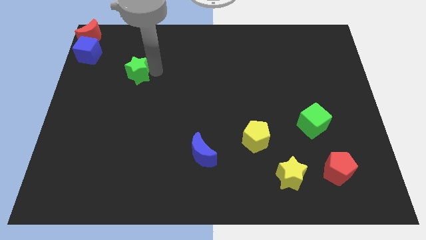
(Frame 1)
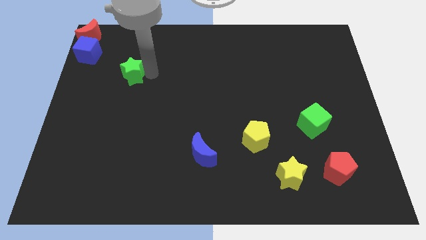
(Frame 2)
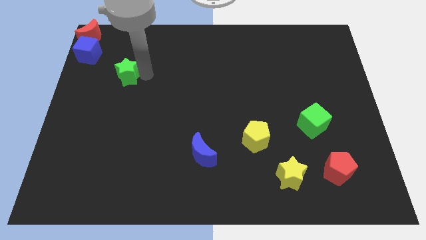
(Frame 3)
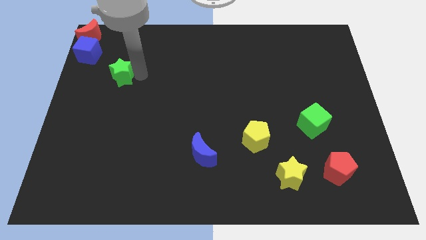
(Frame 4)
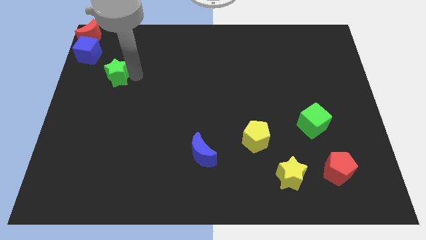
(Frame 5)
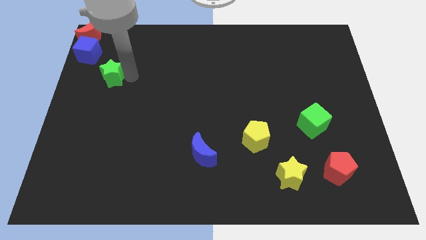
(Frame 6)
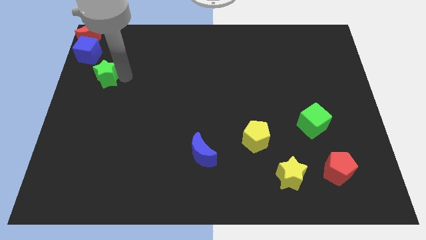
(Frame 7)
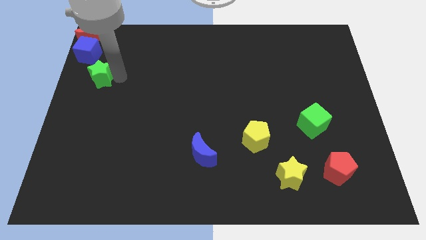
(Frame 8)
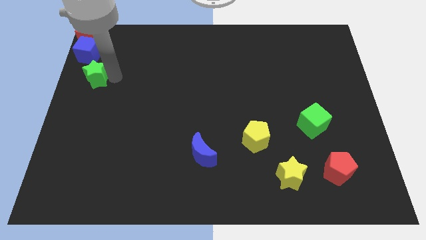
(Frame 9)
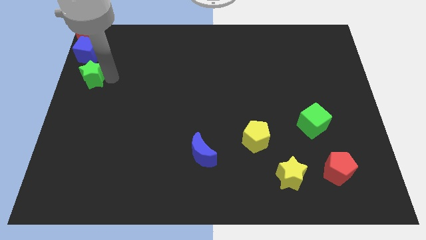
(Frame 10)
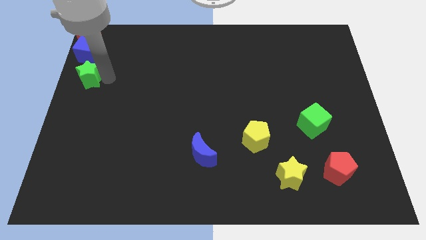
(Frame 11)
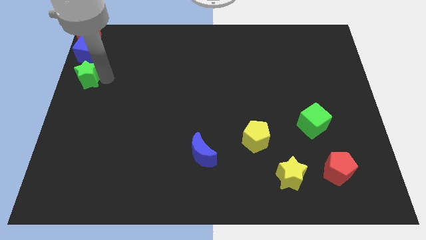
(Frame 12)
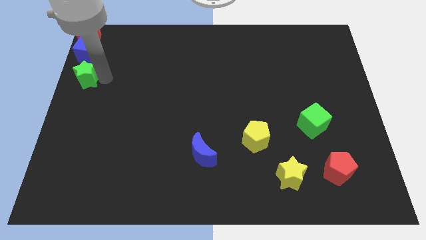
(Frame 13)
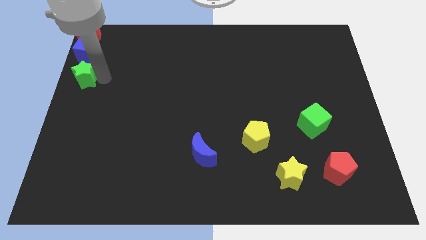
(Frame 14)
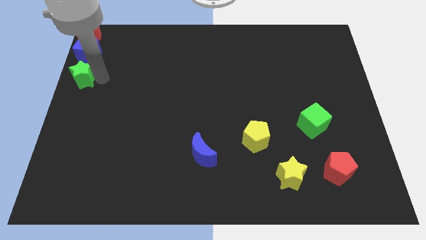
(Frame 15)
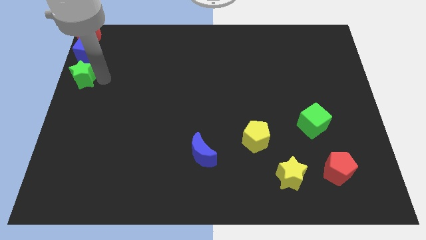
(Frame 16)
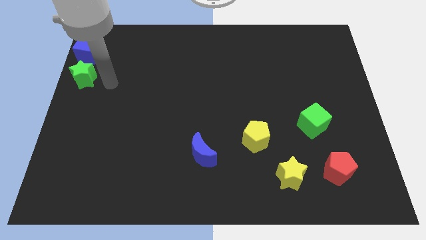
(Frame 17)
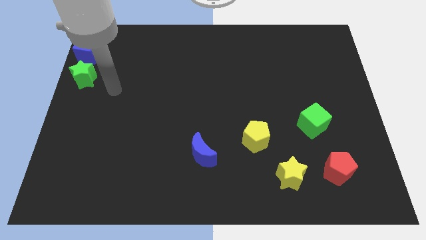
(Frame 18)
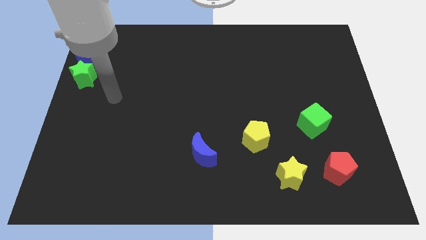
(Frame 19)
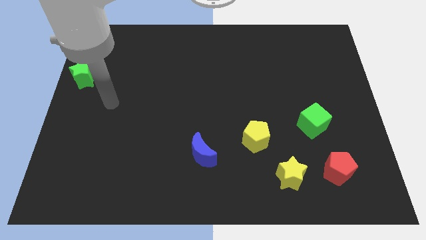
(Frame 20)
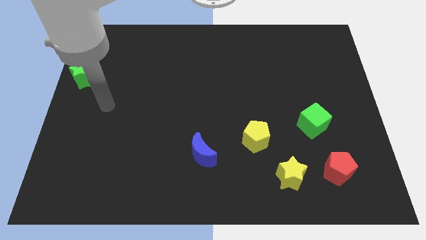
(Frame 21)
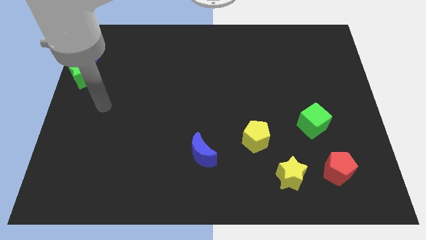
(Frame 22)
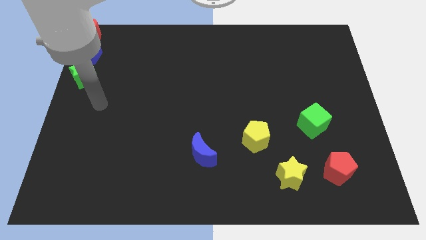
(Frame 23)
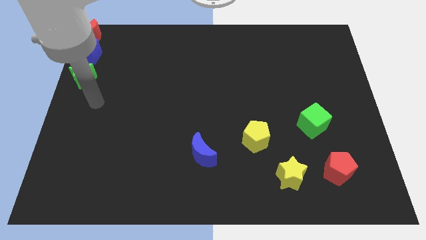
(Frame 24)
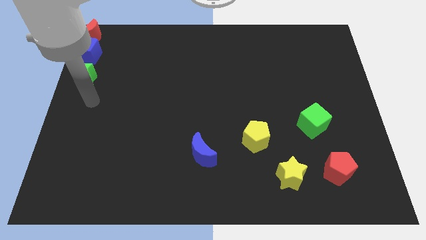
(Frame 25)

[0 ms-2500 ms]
move green star towards the blue cube

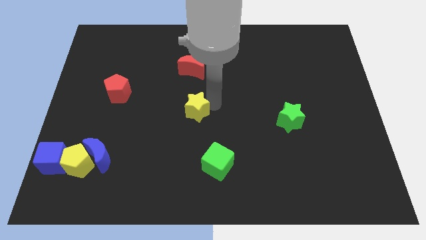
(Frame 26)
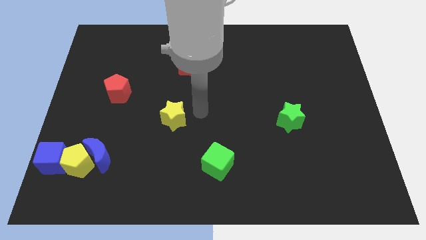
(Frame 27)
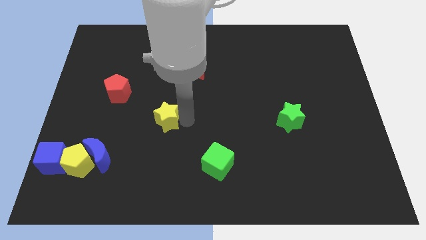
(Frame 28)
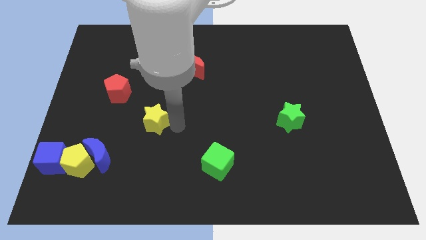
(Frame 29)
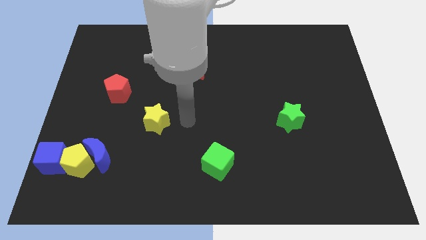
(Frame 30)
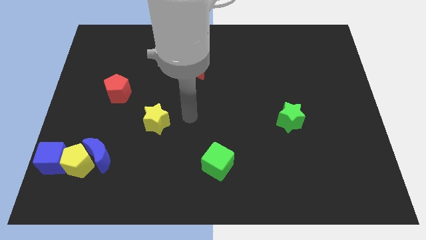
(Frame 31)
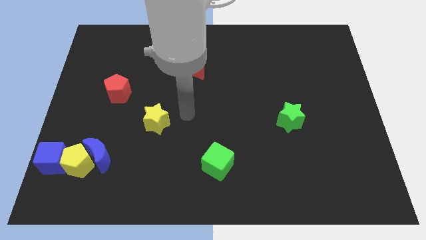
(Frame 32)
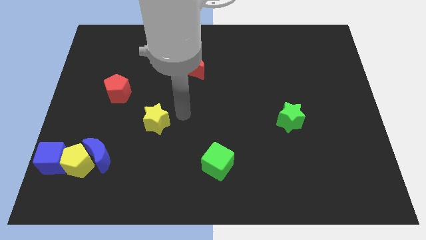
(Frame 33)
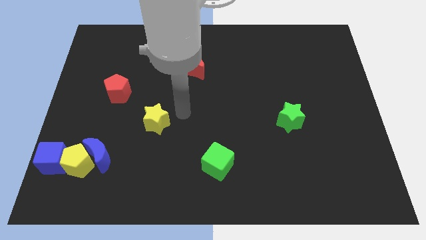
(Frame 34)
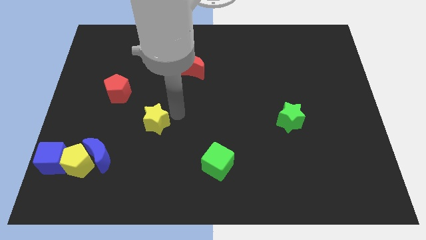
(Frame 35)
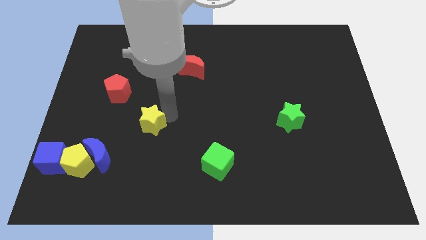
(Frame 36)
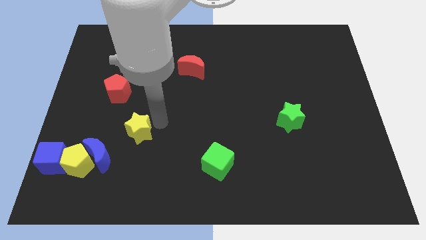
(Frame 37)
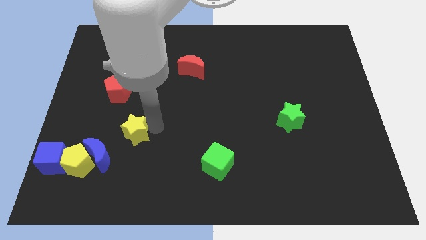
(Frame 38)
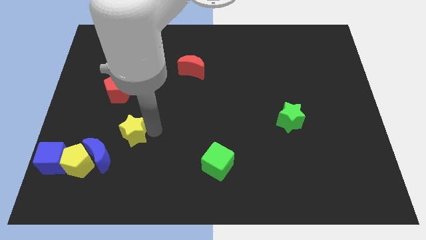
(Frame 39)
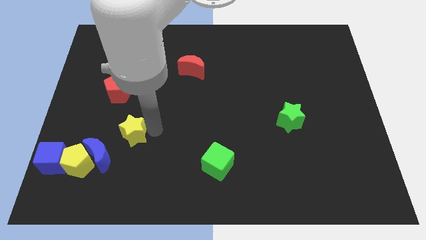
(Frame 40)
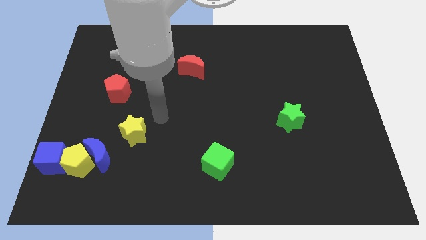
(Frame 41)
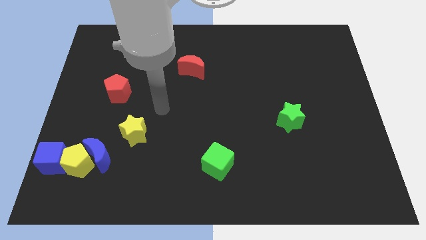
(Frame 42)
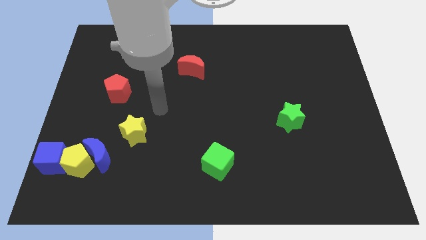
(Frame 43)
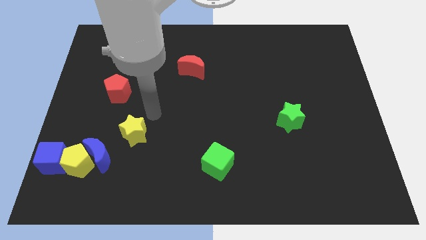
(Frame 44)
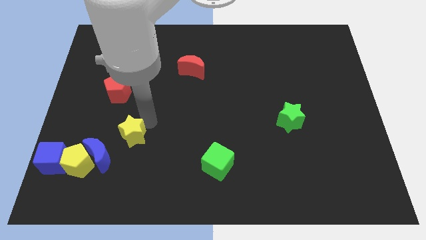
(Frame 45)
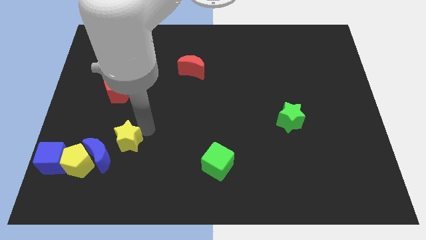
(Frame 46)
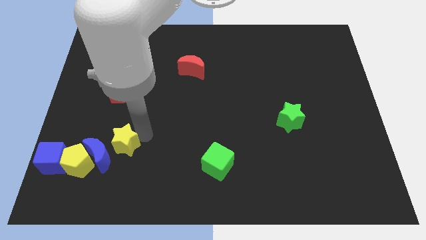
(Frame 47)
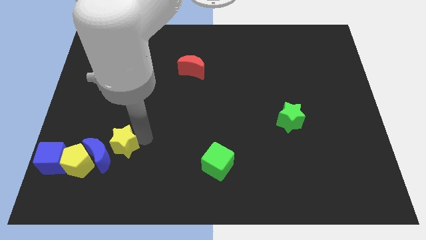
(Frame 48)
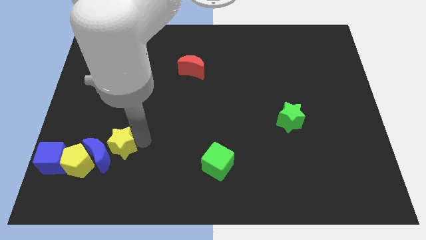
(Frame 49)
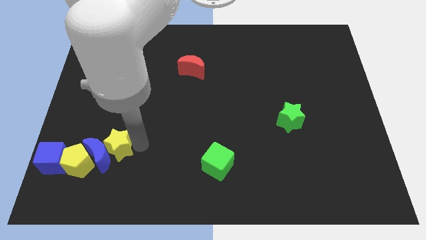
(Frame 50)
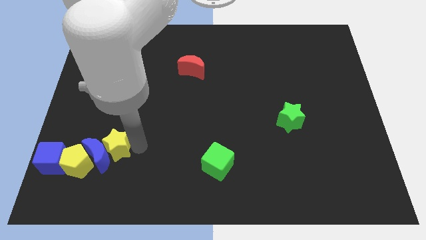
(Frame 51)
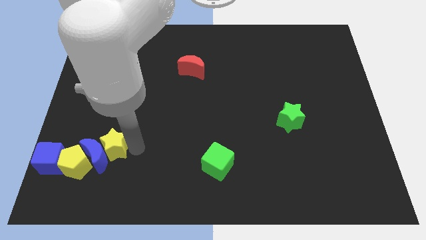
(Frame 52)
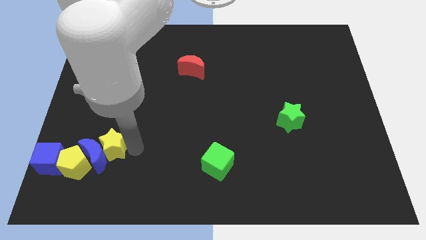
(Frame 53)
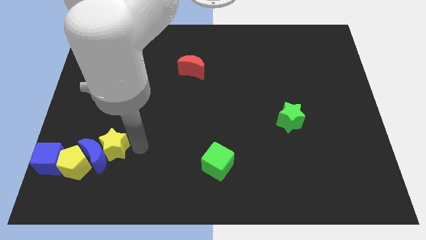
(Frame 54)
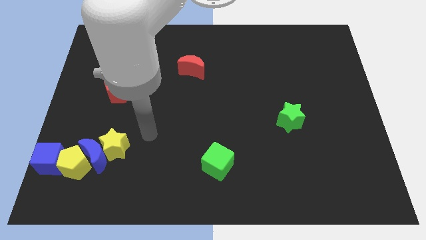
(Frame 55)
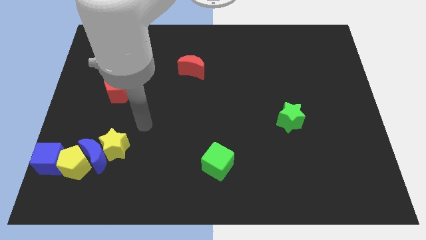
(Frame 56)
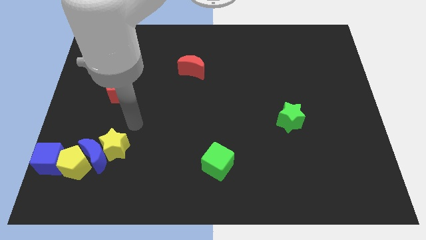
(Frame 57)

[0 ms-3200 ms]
move yellow star towards blue moon

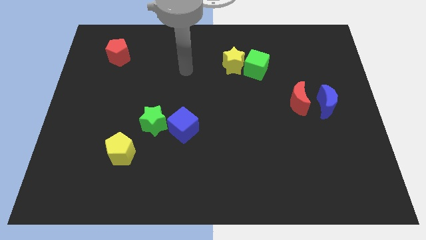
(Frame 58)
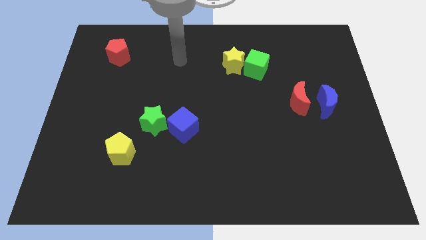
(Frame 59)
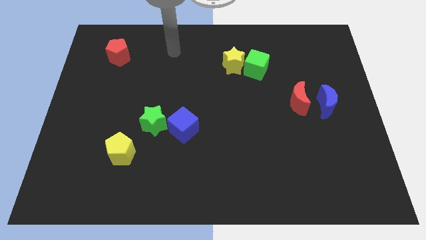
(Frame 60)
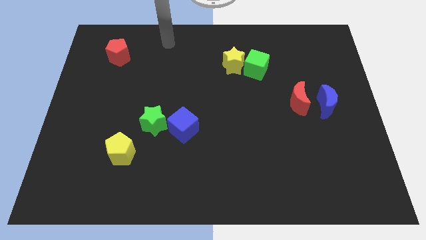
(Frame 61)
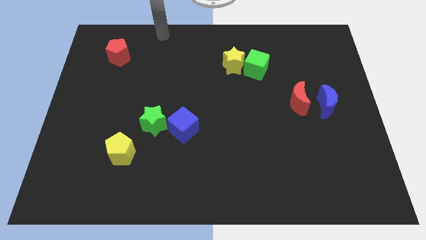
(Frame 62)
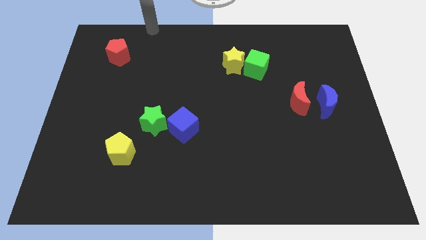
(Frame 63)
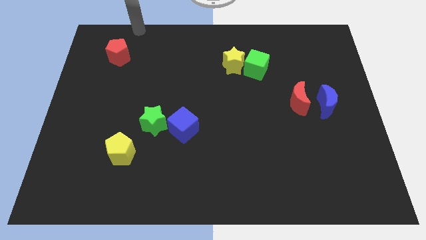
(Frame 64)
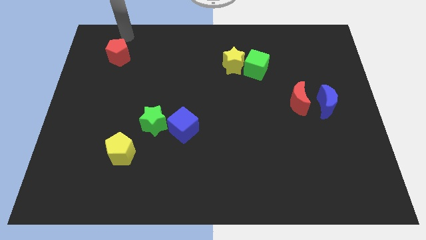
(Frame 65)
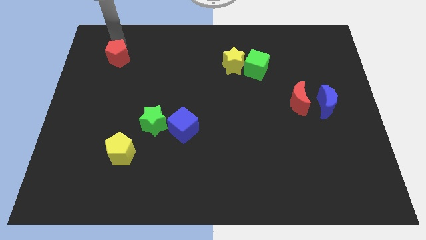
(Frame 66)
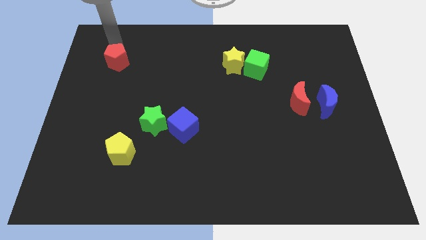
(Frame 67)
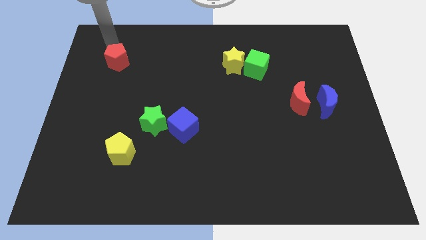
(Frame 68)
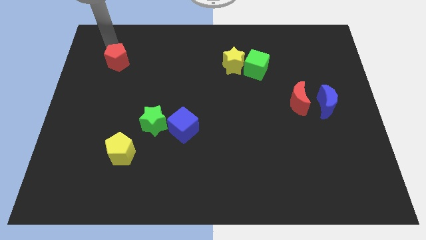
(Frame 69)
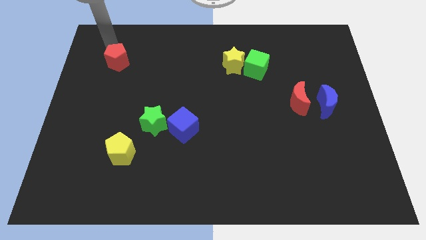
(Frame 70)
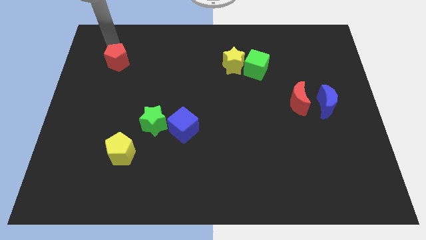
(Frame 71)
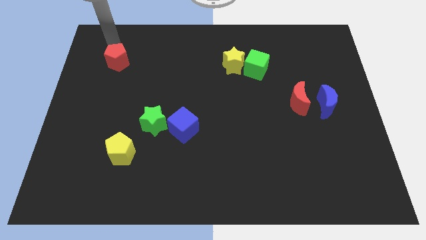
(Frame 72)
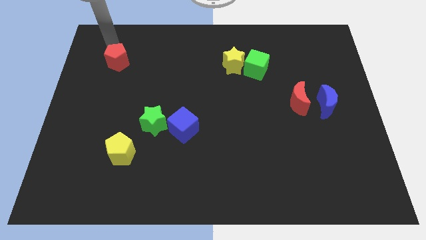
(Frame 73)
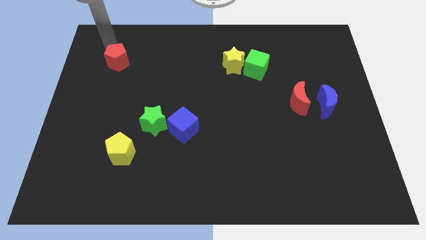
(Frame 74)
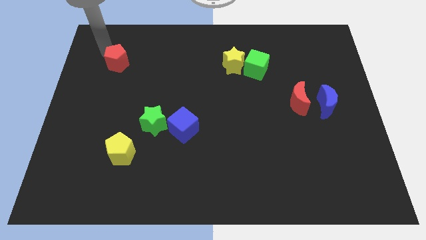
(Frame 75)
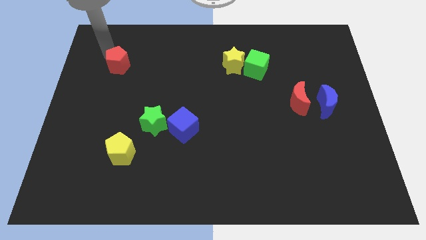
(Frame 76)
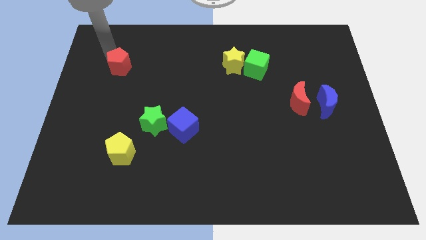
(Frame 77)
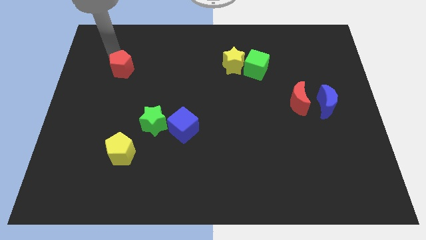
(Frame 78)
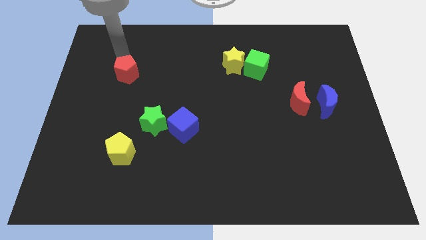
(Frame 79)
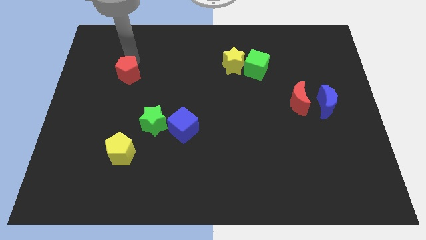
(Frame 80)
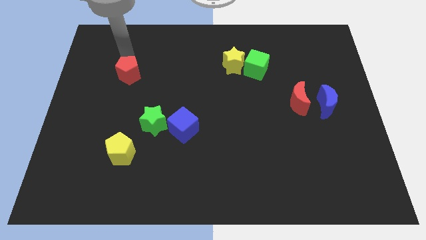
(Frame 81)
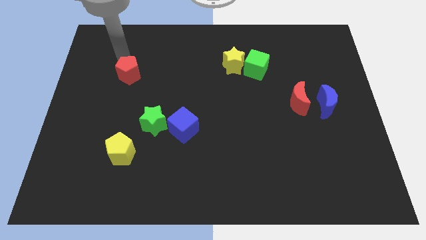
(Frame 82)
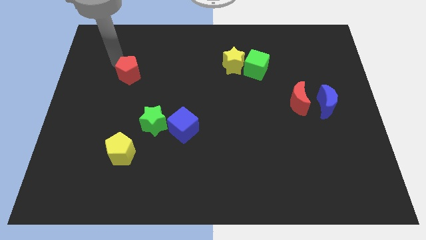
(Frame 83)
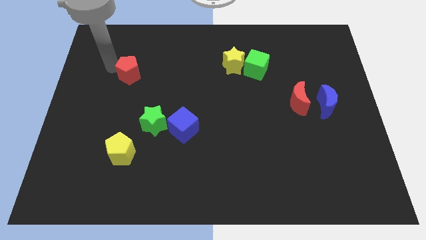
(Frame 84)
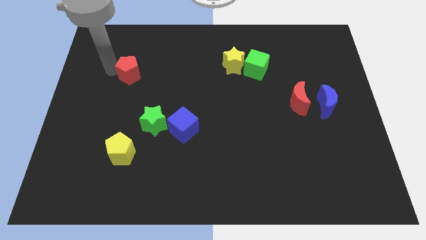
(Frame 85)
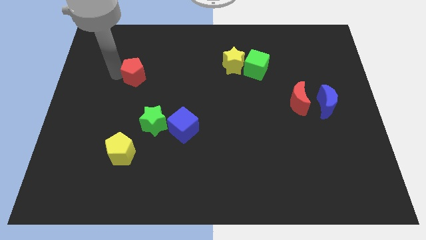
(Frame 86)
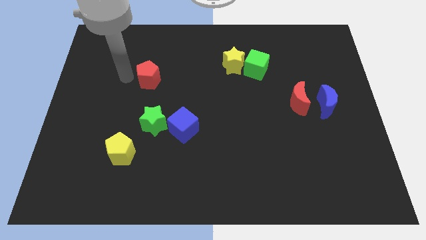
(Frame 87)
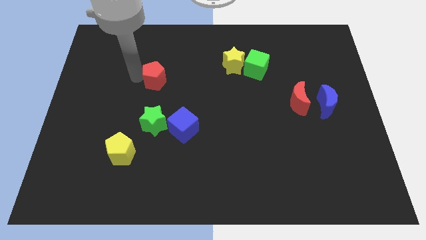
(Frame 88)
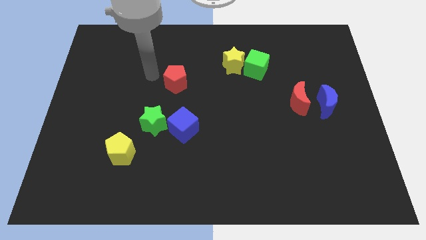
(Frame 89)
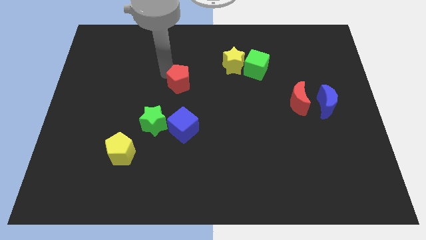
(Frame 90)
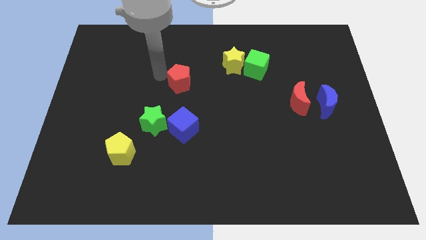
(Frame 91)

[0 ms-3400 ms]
place red pentagon to the top of blue cube
